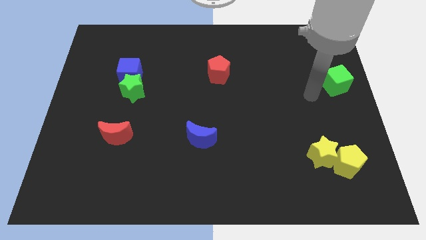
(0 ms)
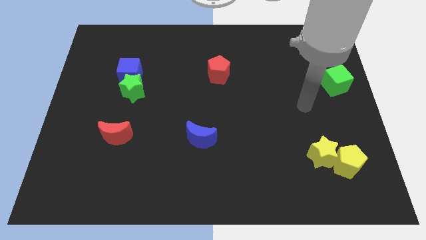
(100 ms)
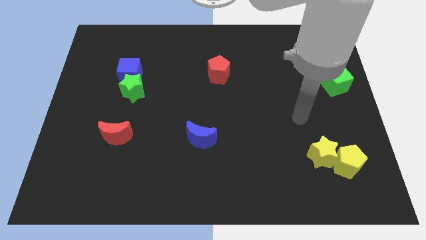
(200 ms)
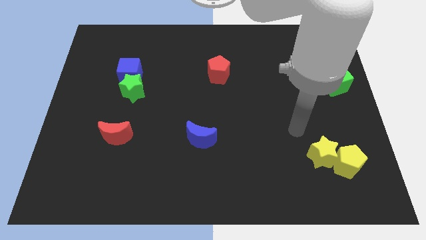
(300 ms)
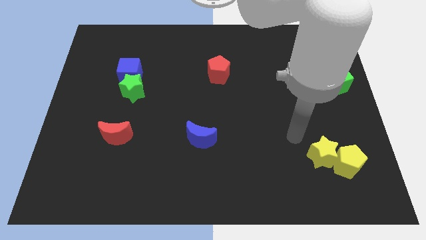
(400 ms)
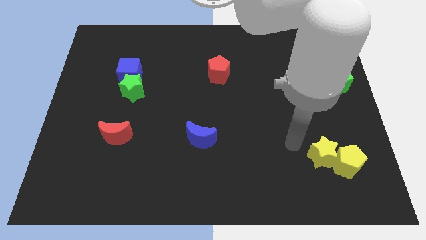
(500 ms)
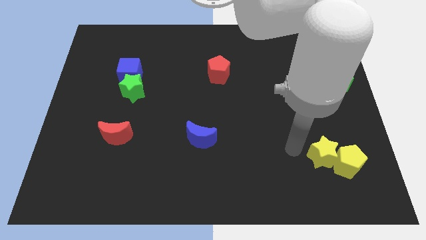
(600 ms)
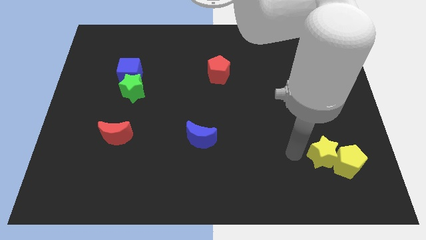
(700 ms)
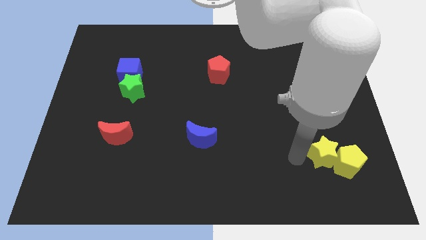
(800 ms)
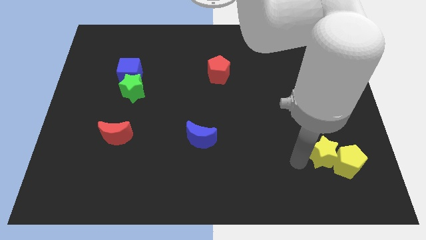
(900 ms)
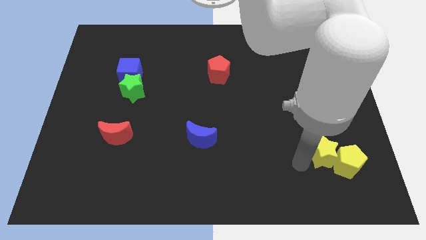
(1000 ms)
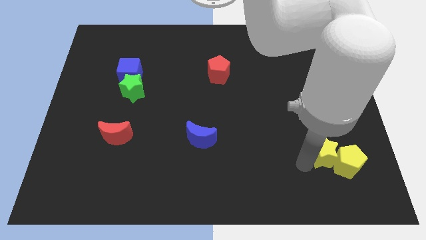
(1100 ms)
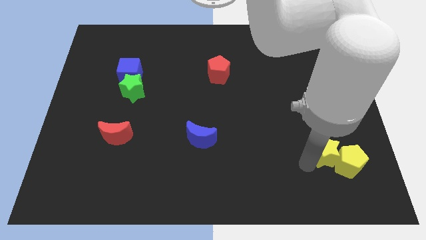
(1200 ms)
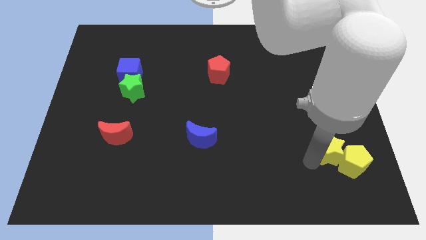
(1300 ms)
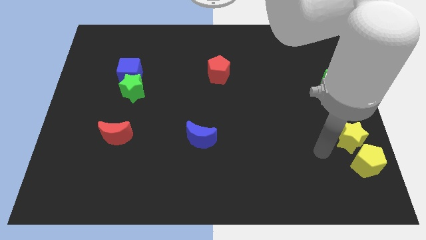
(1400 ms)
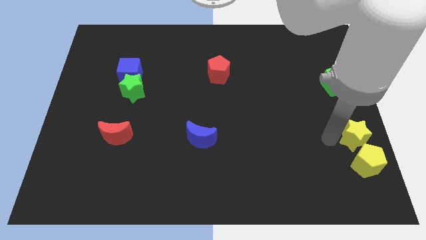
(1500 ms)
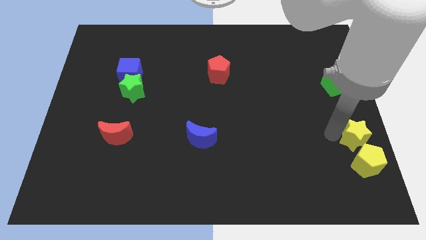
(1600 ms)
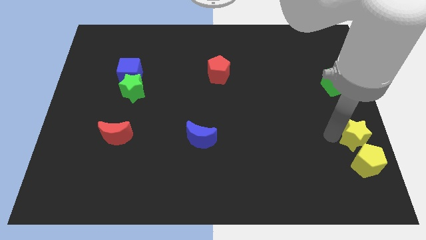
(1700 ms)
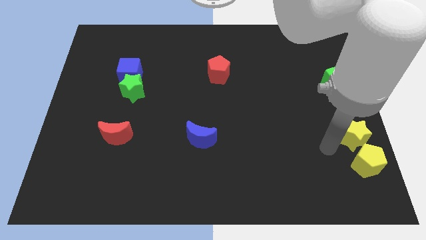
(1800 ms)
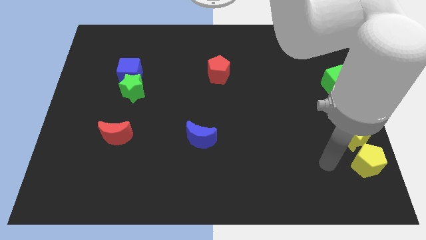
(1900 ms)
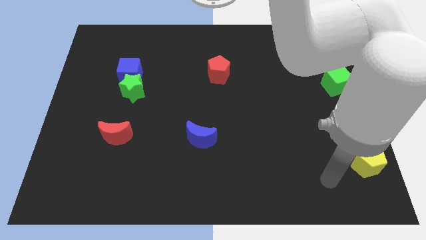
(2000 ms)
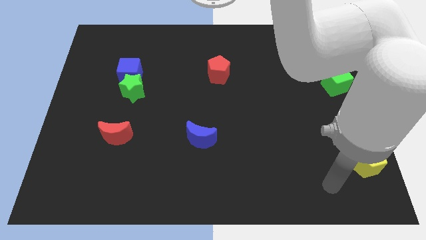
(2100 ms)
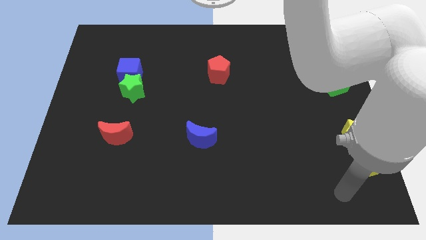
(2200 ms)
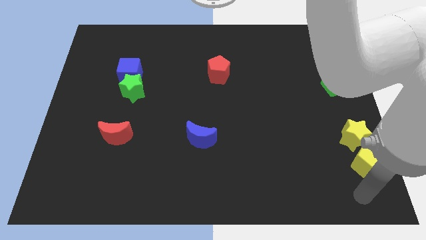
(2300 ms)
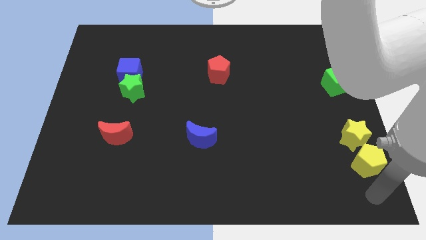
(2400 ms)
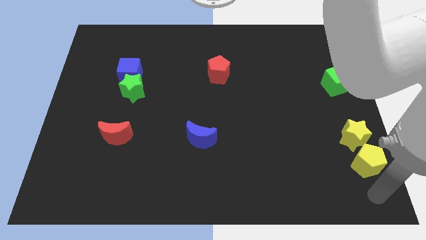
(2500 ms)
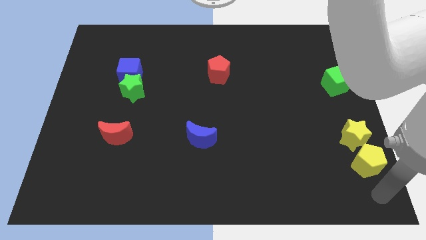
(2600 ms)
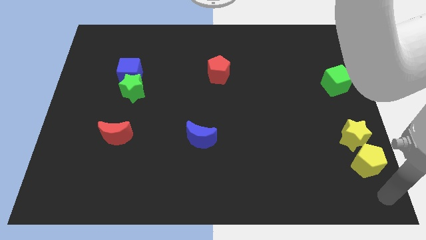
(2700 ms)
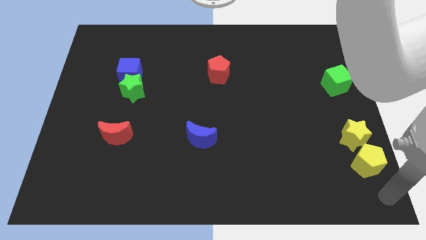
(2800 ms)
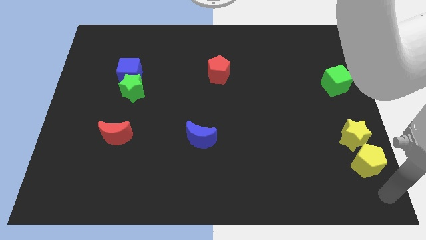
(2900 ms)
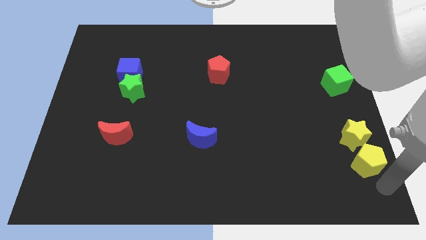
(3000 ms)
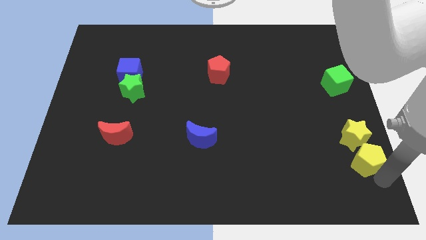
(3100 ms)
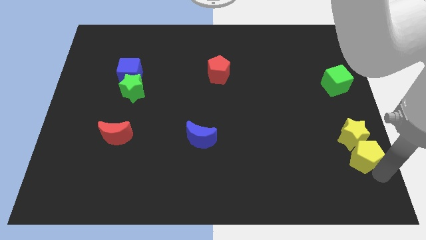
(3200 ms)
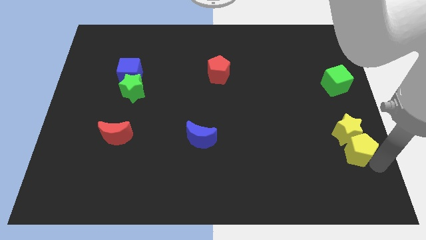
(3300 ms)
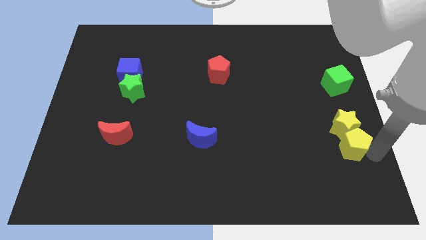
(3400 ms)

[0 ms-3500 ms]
move both yellow blocks slightly up

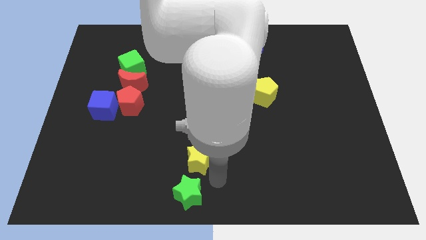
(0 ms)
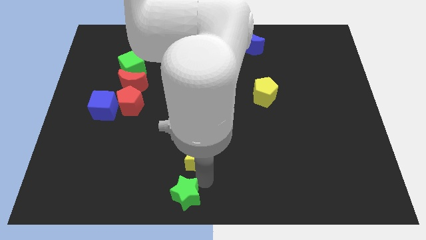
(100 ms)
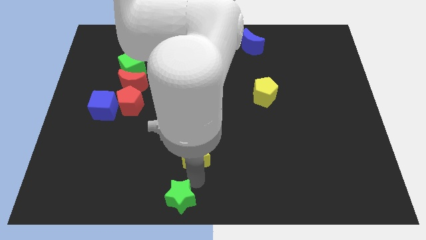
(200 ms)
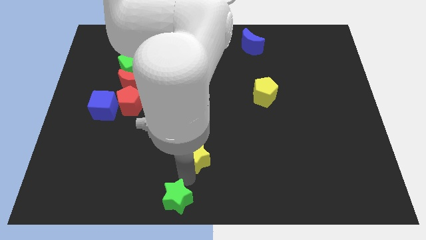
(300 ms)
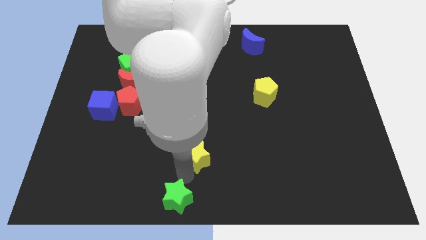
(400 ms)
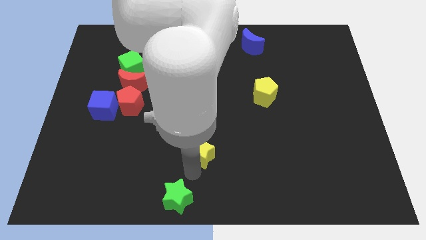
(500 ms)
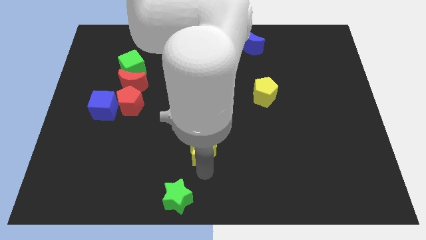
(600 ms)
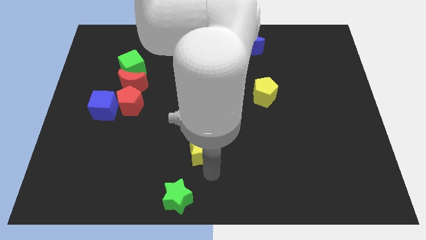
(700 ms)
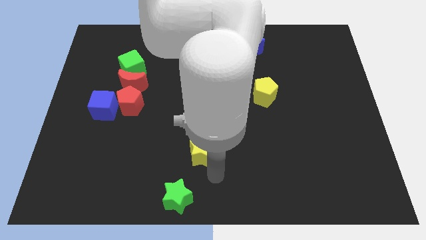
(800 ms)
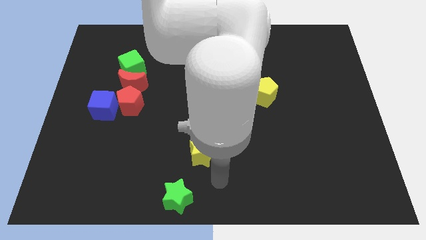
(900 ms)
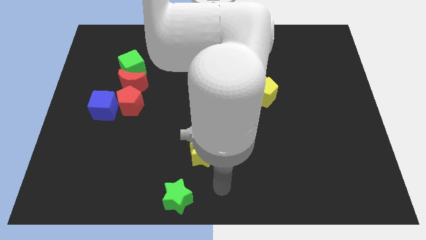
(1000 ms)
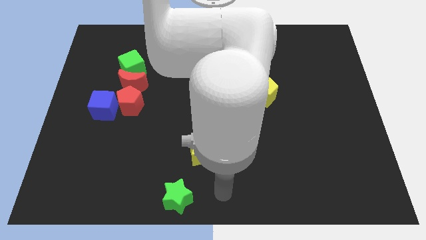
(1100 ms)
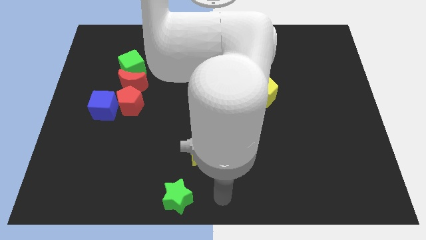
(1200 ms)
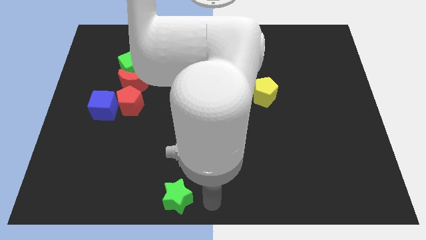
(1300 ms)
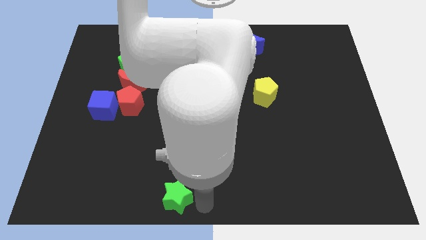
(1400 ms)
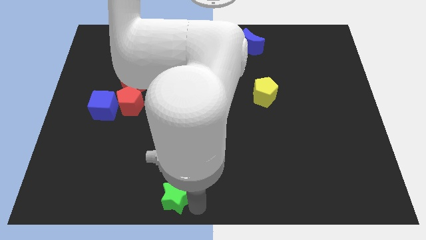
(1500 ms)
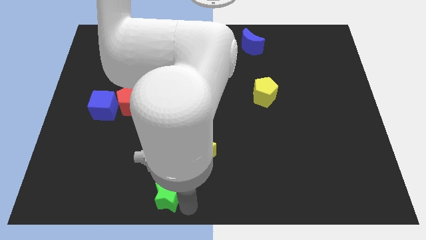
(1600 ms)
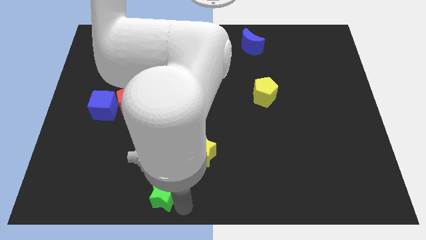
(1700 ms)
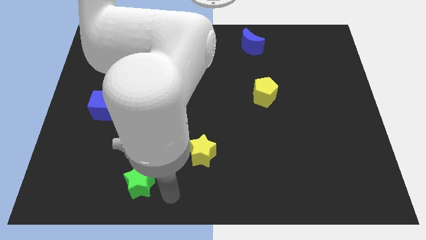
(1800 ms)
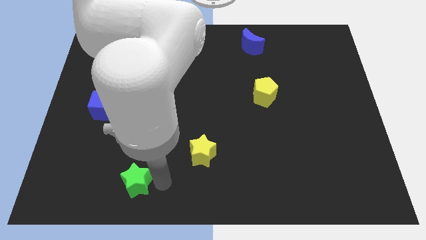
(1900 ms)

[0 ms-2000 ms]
push the green star to the left

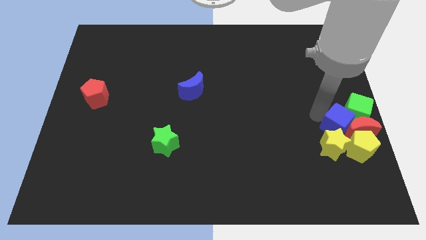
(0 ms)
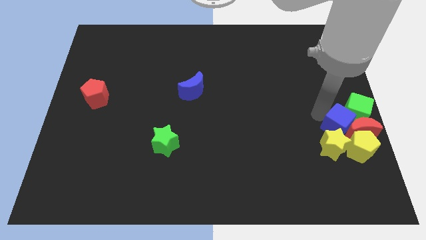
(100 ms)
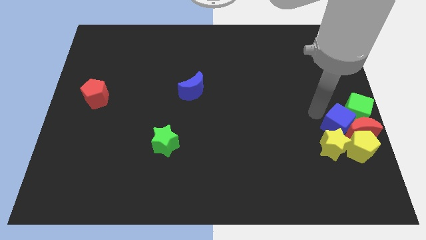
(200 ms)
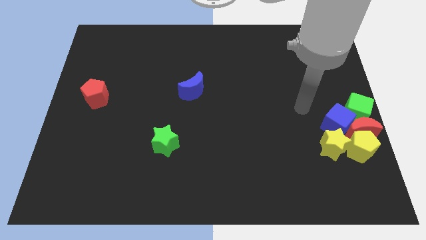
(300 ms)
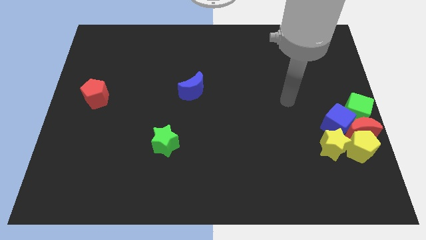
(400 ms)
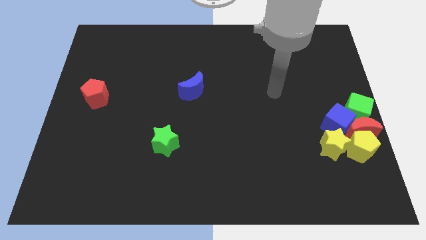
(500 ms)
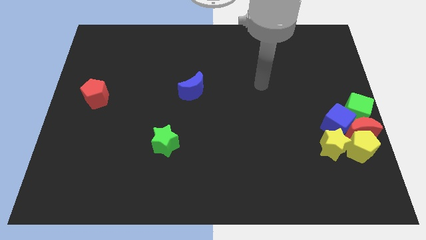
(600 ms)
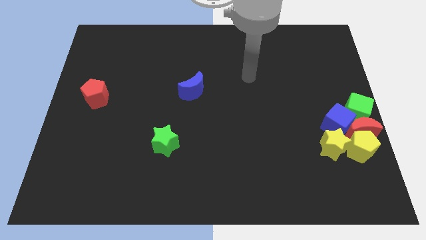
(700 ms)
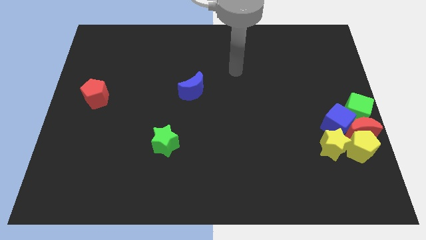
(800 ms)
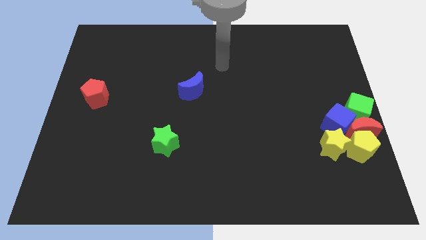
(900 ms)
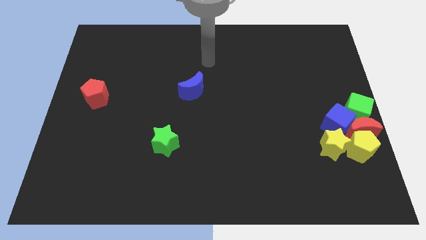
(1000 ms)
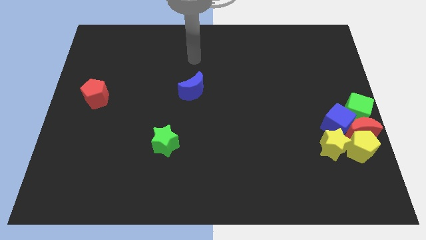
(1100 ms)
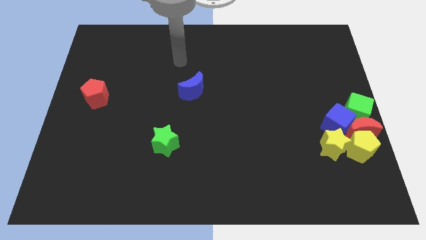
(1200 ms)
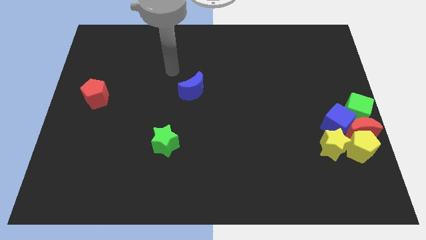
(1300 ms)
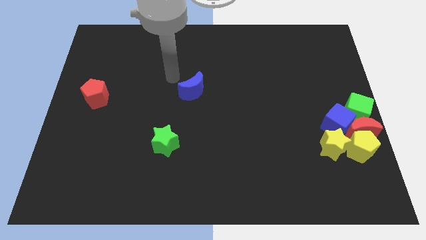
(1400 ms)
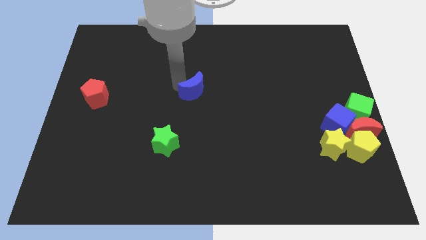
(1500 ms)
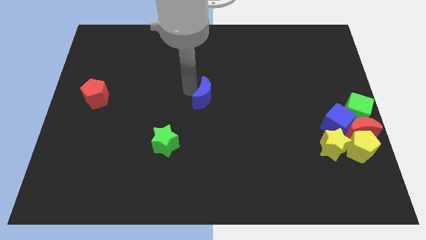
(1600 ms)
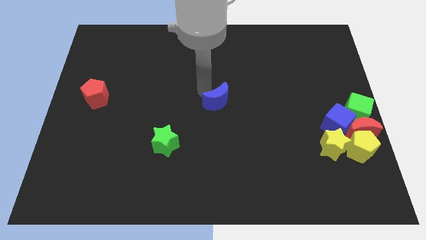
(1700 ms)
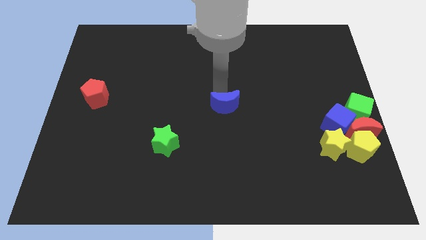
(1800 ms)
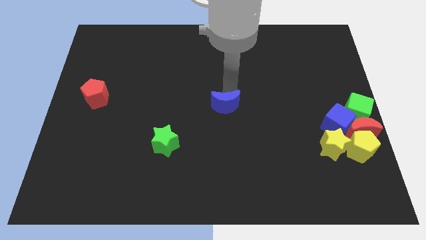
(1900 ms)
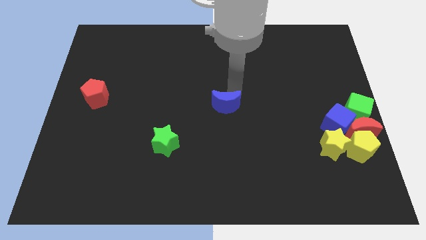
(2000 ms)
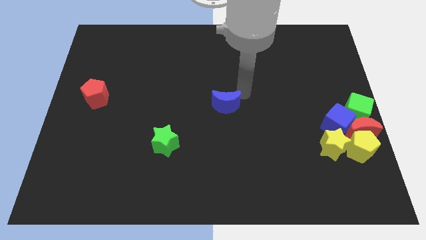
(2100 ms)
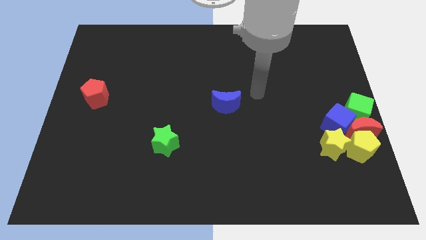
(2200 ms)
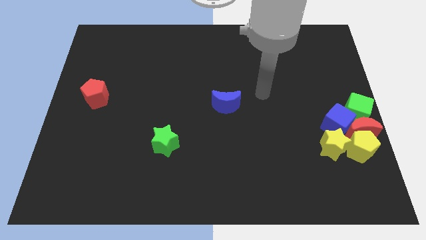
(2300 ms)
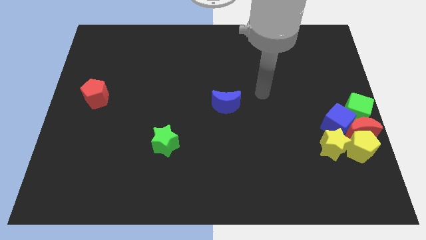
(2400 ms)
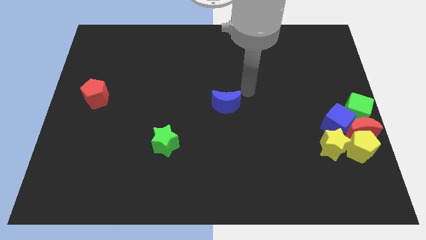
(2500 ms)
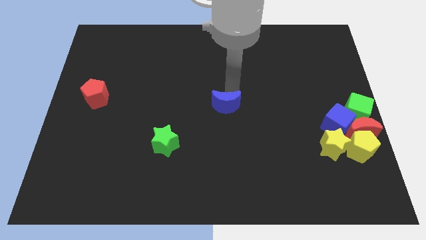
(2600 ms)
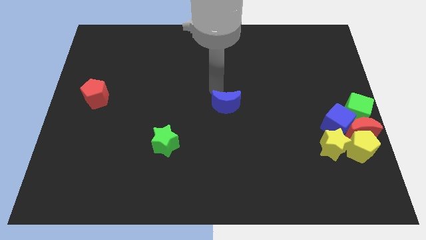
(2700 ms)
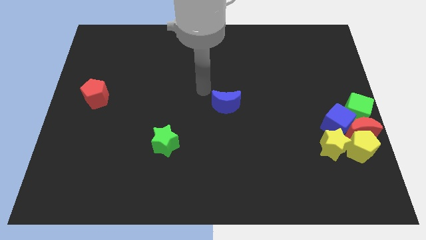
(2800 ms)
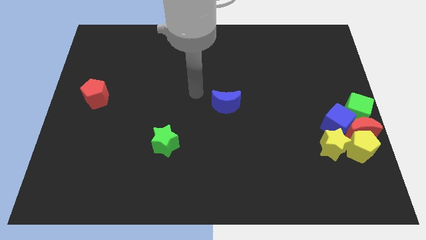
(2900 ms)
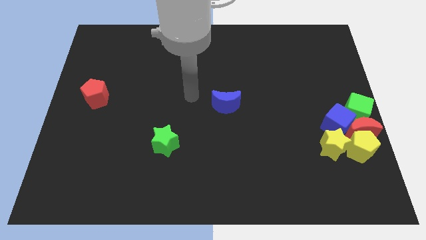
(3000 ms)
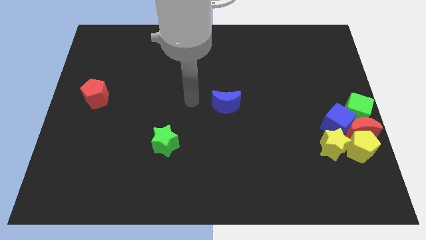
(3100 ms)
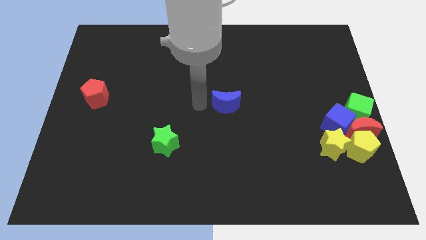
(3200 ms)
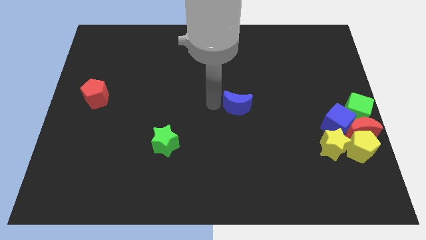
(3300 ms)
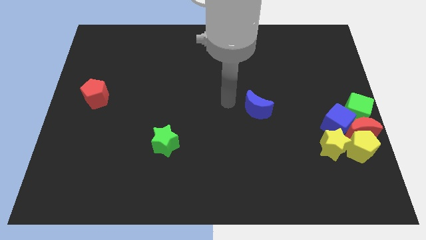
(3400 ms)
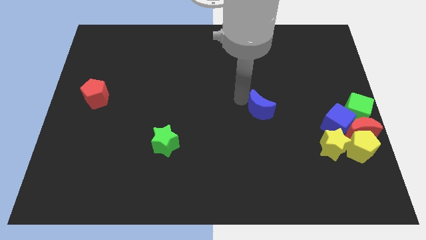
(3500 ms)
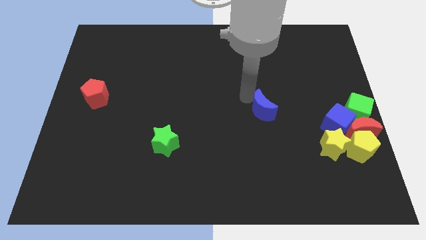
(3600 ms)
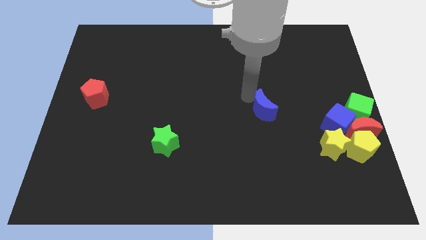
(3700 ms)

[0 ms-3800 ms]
push the blue crescent towards the group of blocks
